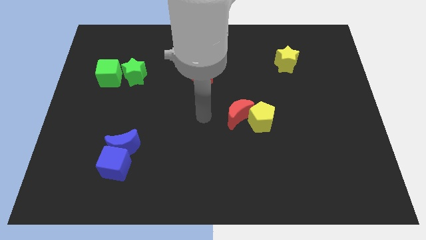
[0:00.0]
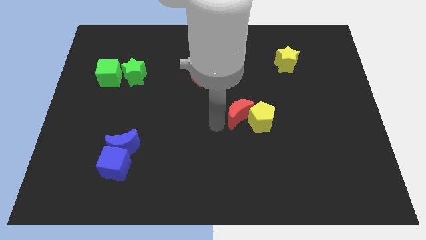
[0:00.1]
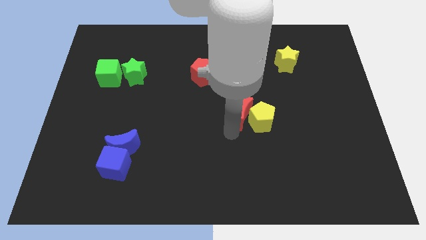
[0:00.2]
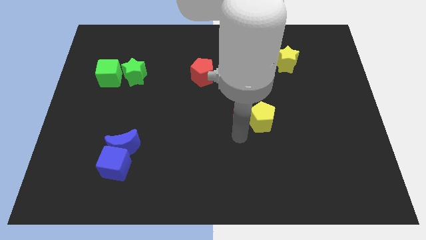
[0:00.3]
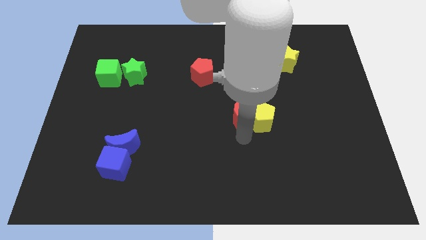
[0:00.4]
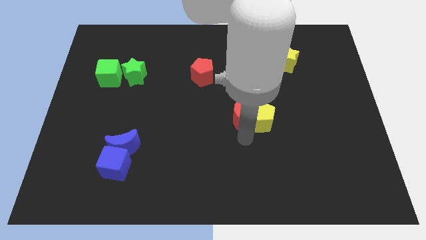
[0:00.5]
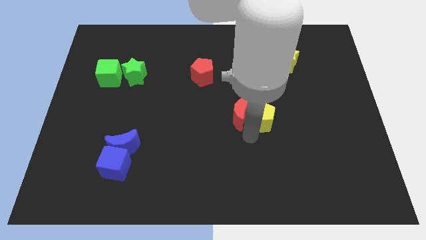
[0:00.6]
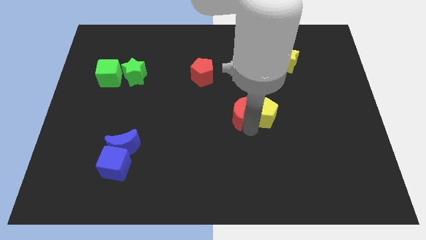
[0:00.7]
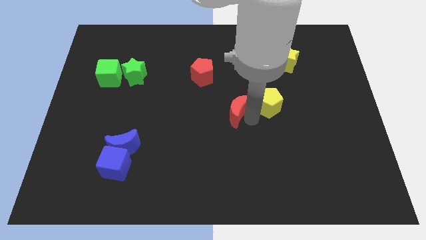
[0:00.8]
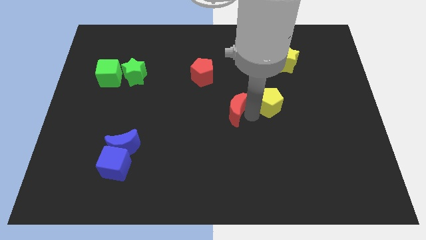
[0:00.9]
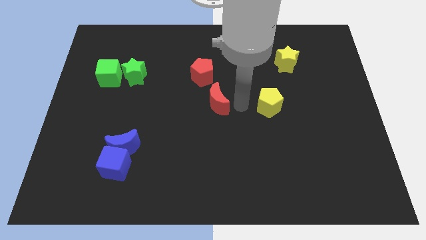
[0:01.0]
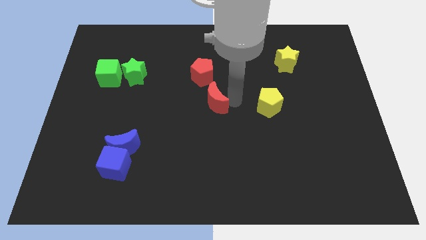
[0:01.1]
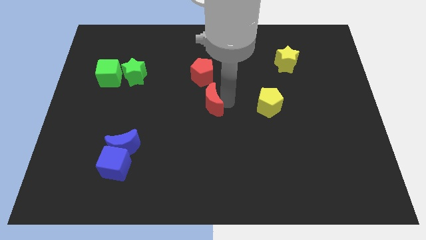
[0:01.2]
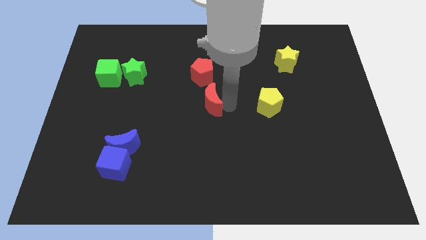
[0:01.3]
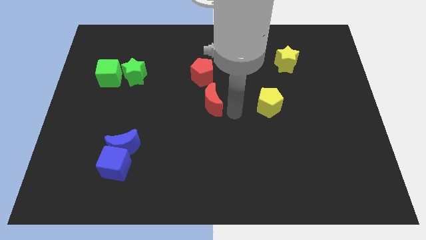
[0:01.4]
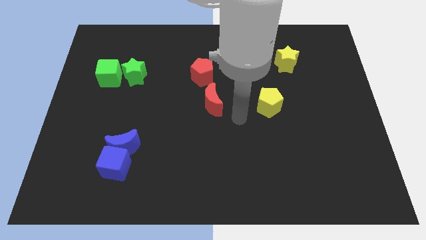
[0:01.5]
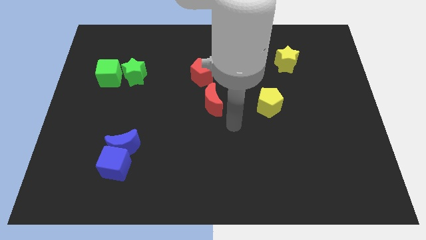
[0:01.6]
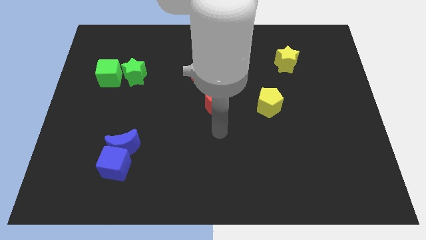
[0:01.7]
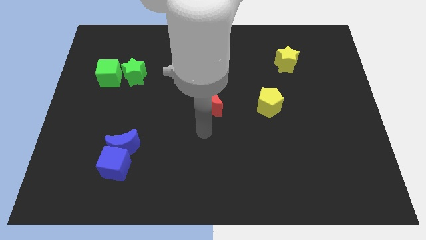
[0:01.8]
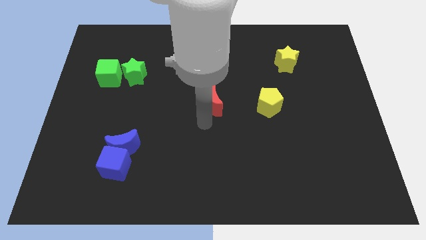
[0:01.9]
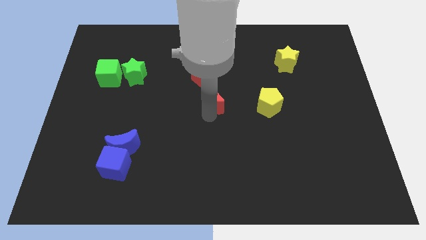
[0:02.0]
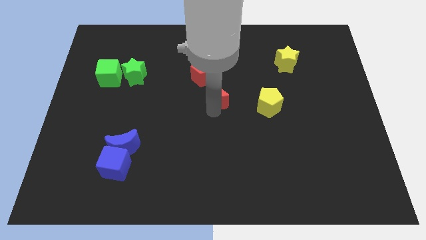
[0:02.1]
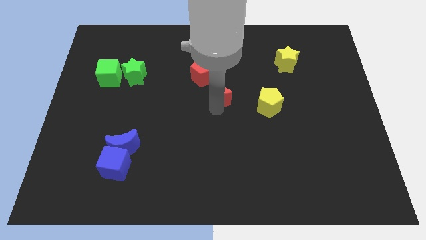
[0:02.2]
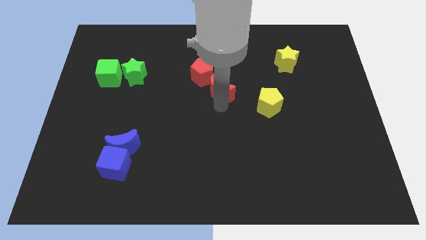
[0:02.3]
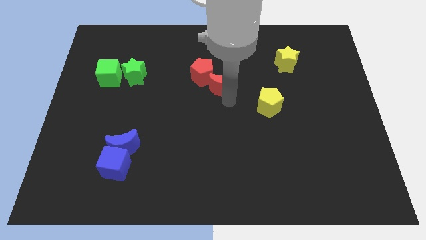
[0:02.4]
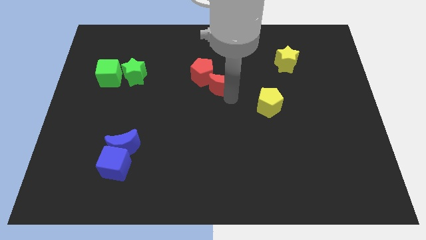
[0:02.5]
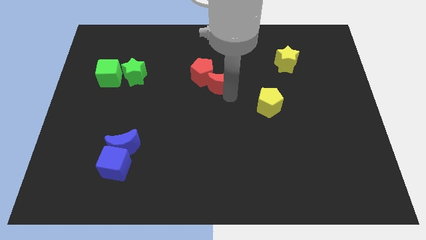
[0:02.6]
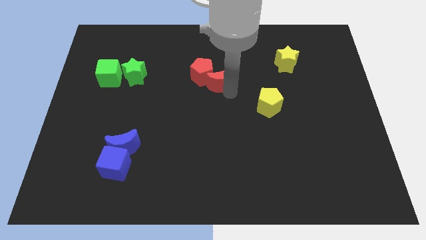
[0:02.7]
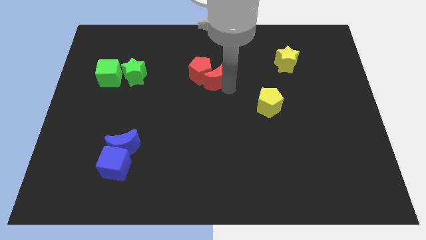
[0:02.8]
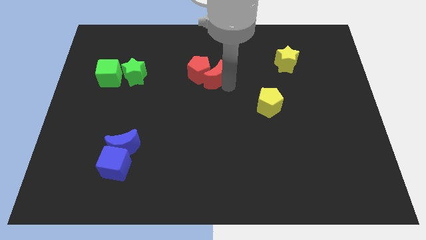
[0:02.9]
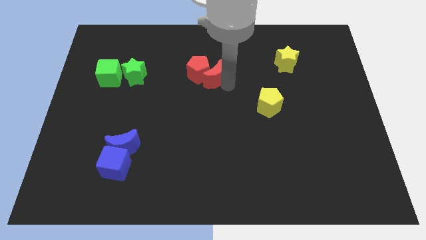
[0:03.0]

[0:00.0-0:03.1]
slide red moon into red pentagon

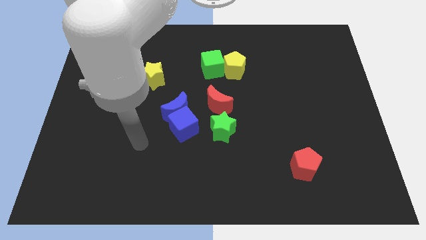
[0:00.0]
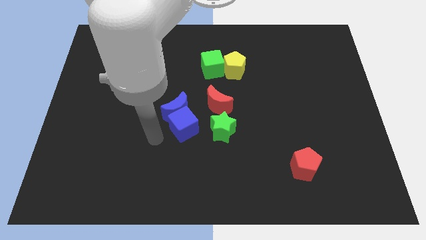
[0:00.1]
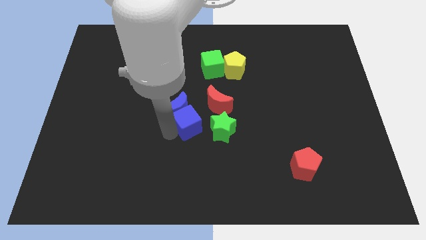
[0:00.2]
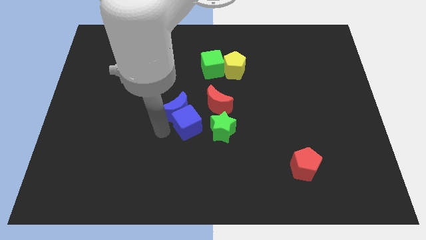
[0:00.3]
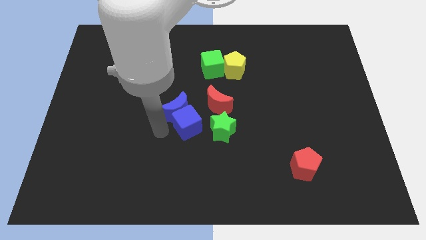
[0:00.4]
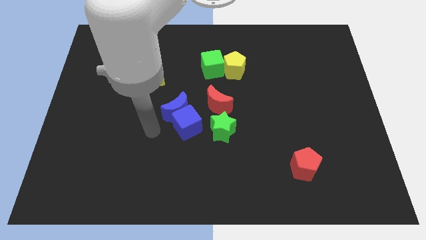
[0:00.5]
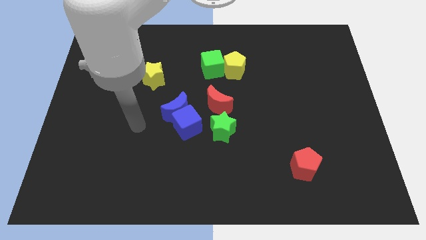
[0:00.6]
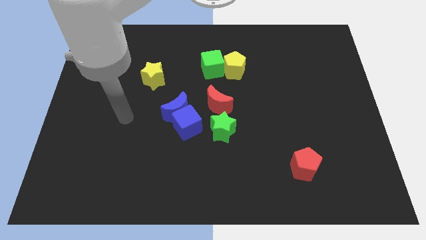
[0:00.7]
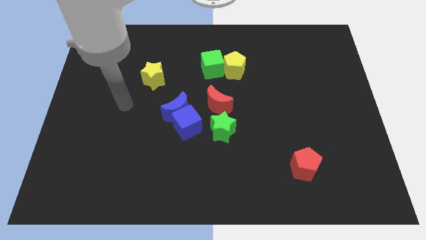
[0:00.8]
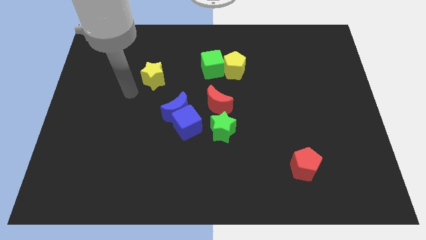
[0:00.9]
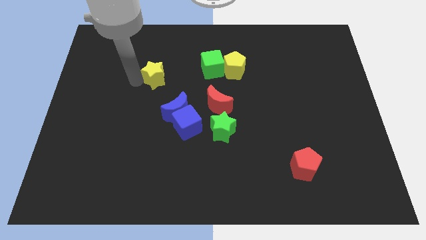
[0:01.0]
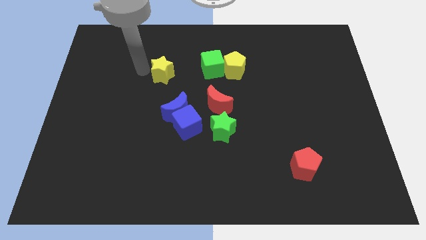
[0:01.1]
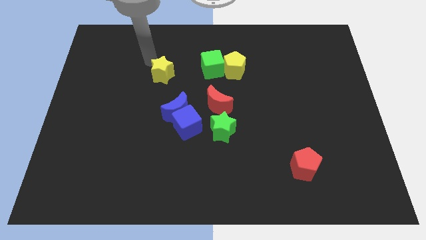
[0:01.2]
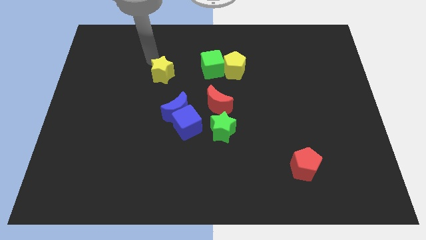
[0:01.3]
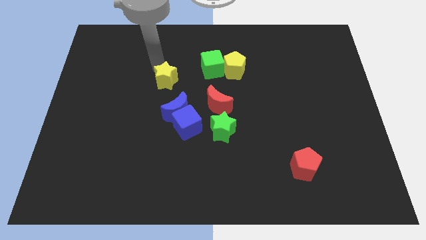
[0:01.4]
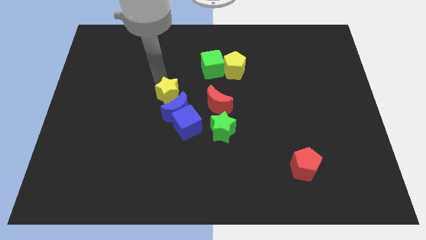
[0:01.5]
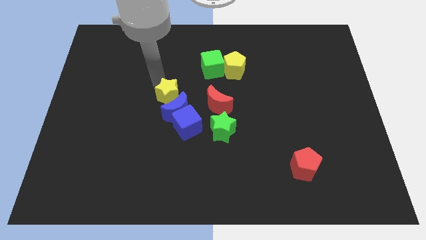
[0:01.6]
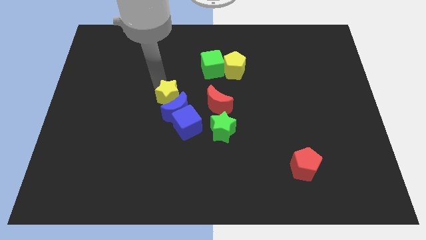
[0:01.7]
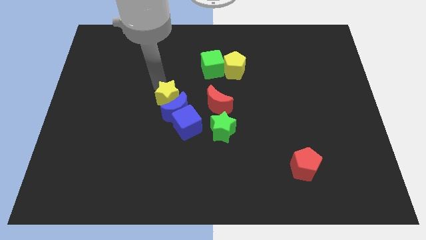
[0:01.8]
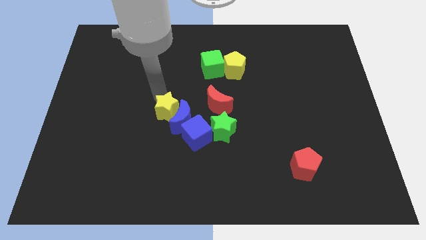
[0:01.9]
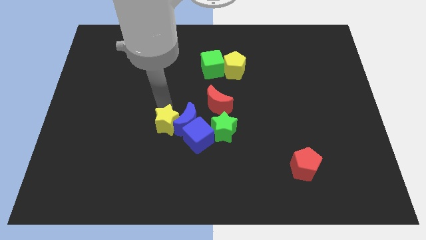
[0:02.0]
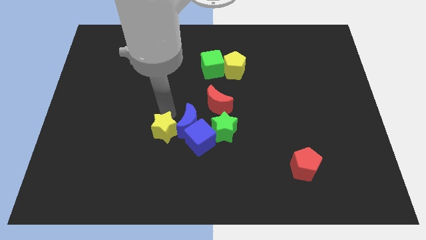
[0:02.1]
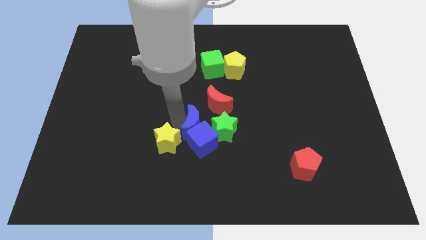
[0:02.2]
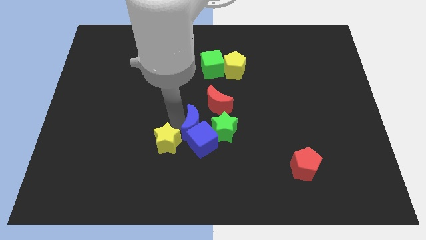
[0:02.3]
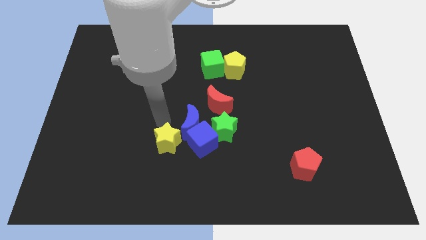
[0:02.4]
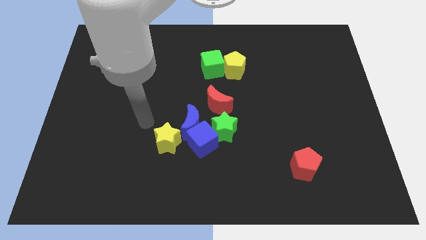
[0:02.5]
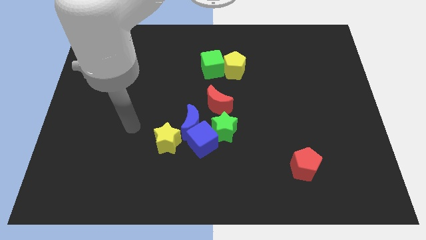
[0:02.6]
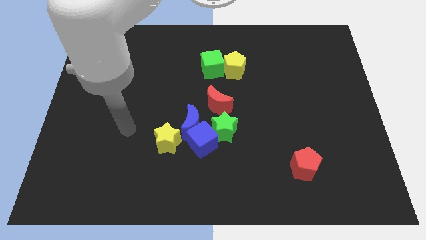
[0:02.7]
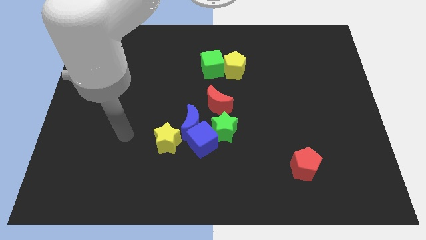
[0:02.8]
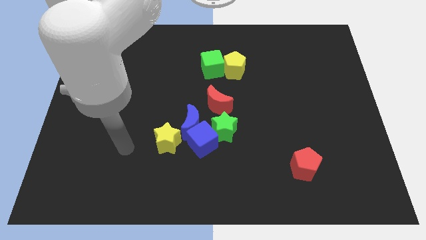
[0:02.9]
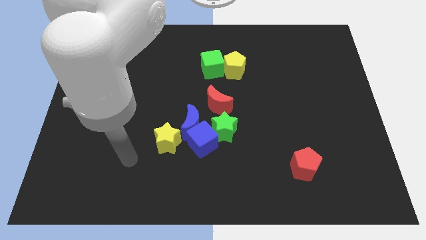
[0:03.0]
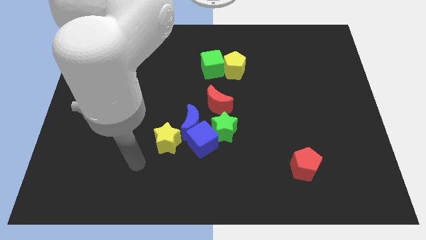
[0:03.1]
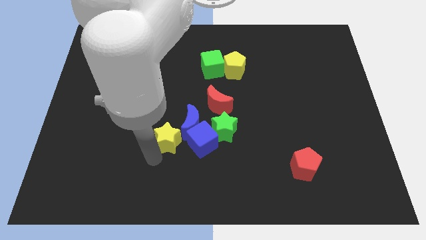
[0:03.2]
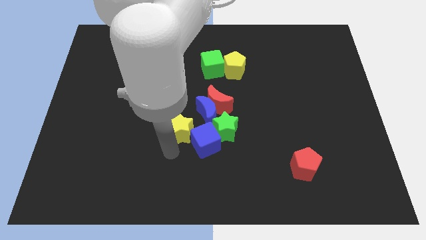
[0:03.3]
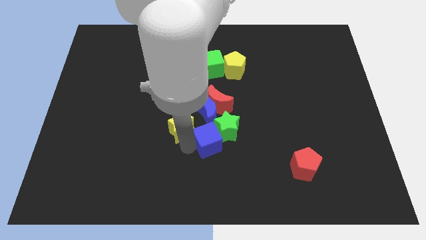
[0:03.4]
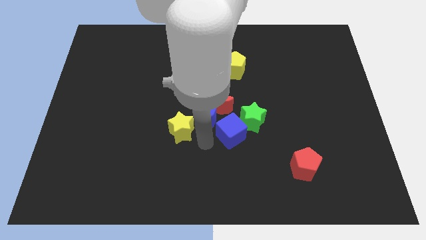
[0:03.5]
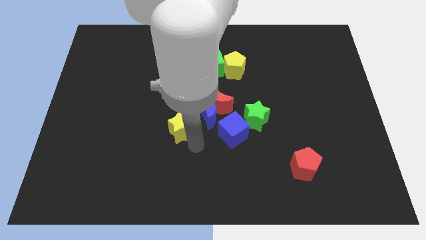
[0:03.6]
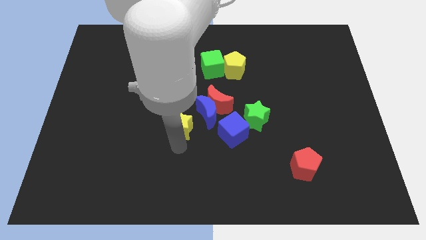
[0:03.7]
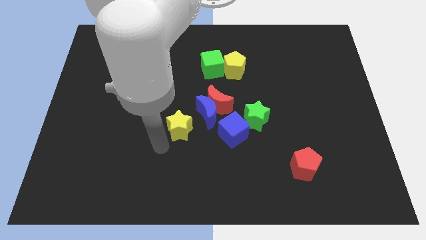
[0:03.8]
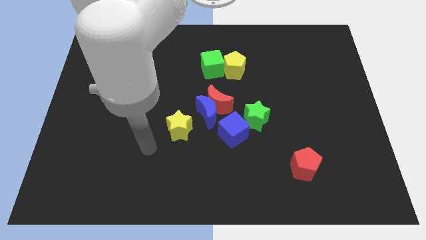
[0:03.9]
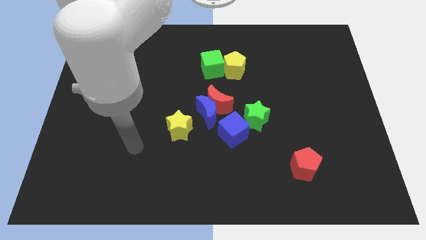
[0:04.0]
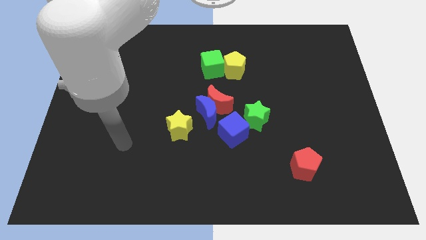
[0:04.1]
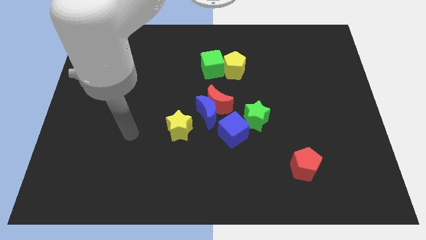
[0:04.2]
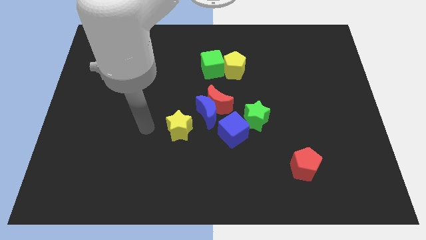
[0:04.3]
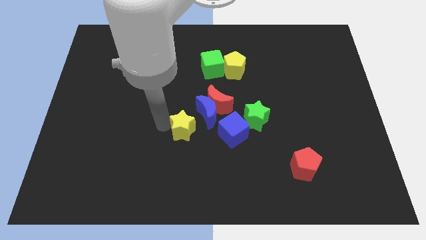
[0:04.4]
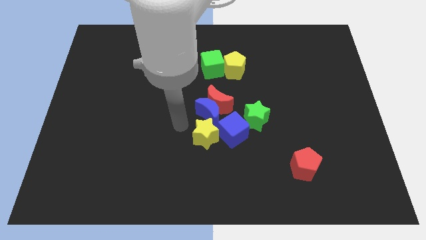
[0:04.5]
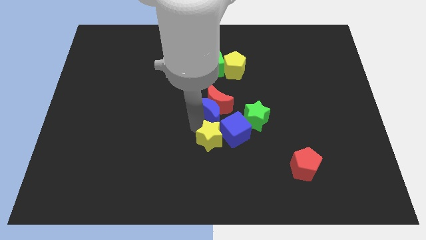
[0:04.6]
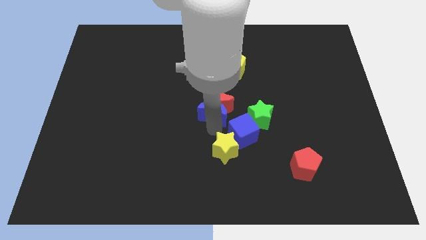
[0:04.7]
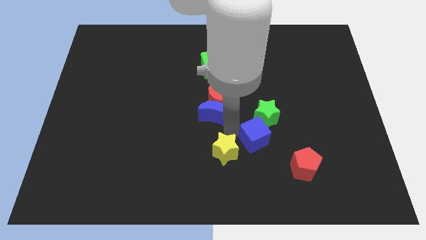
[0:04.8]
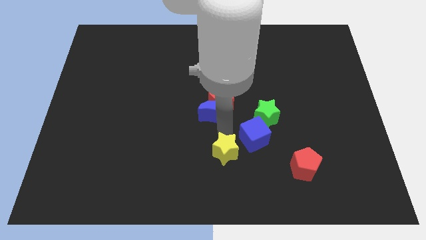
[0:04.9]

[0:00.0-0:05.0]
push blue cube and crescent with the yellow star

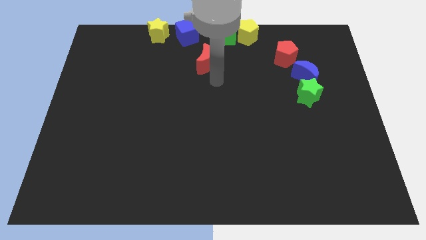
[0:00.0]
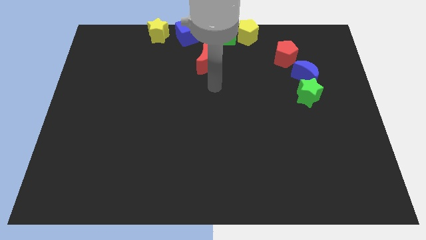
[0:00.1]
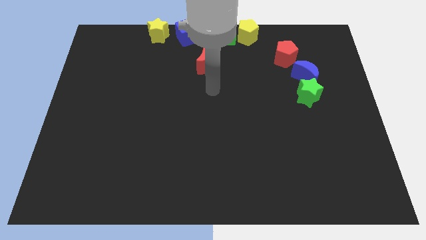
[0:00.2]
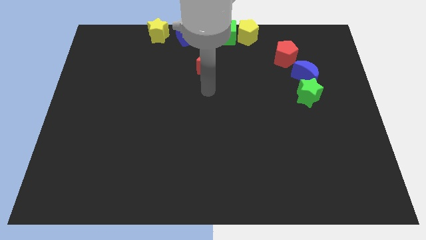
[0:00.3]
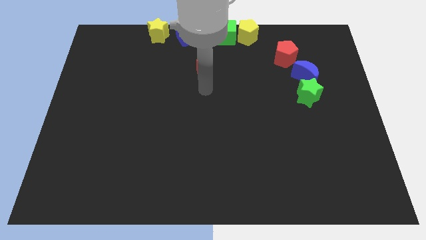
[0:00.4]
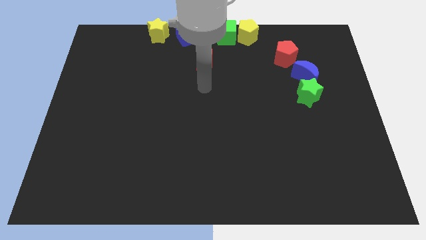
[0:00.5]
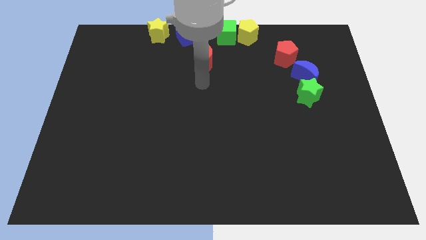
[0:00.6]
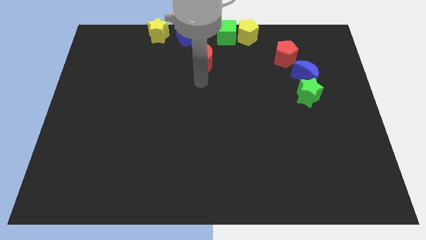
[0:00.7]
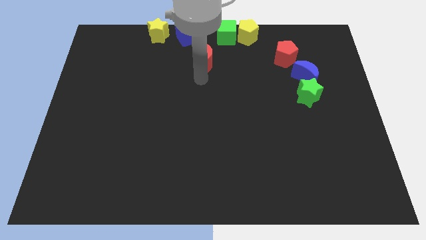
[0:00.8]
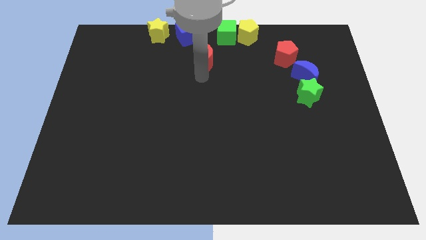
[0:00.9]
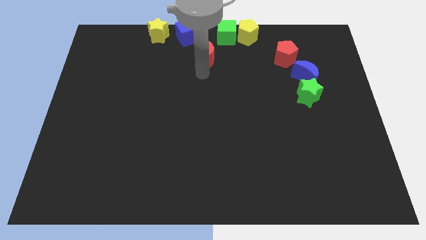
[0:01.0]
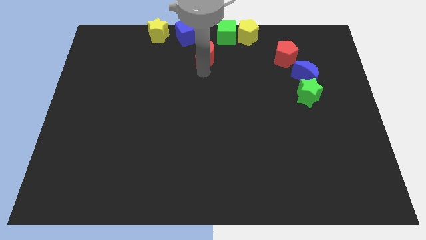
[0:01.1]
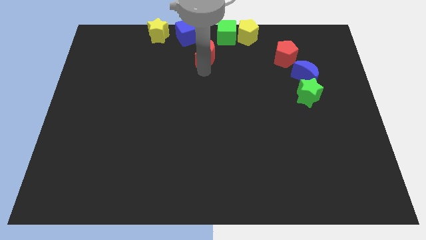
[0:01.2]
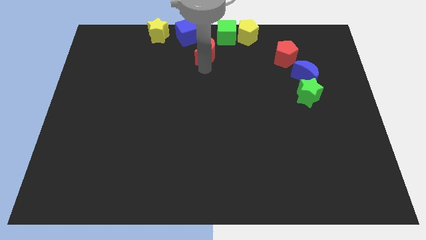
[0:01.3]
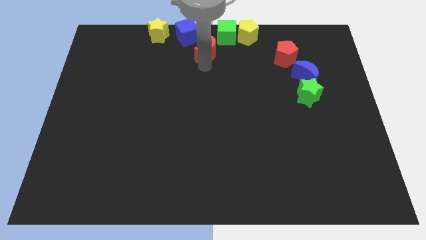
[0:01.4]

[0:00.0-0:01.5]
move the red moon to the top center of the board
